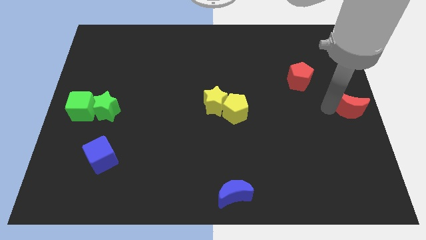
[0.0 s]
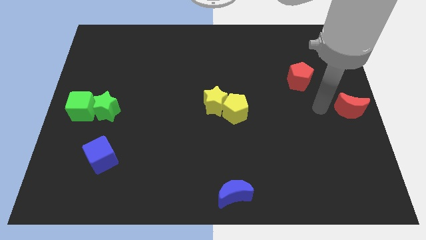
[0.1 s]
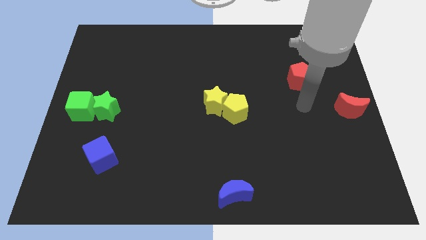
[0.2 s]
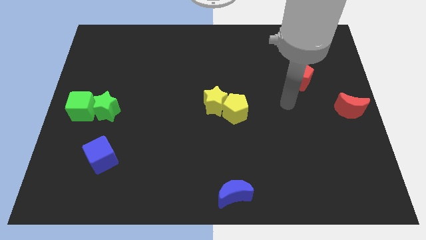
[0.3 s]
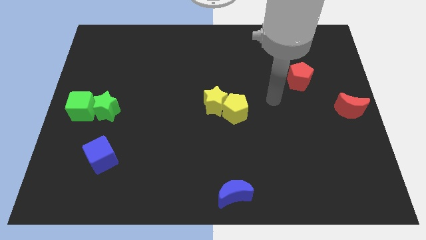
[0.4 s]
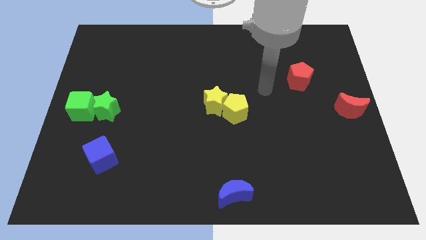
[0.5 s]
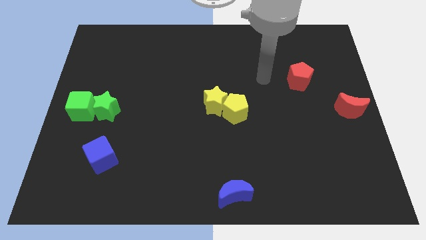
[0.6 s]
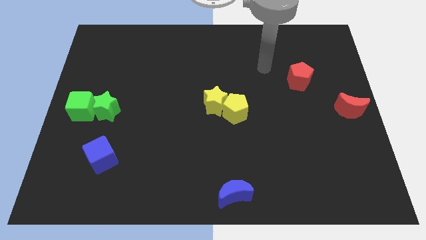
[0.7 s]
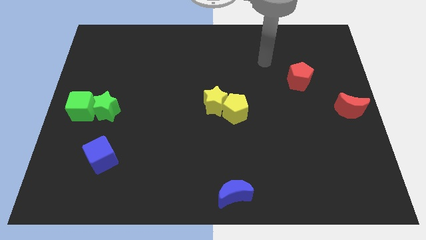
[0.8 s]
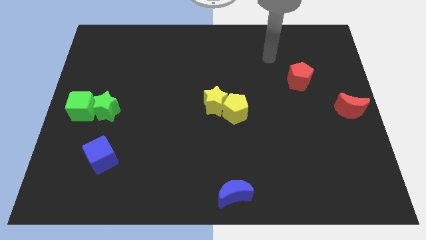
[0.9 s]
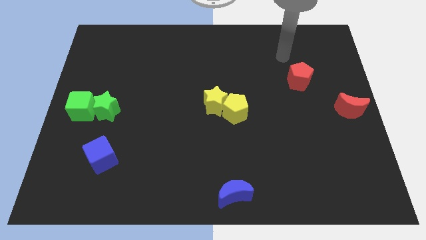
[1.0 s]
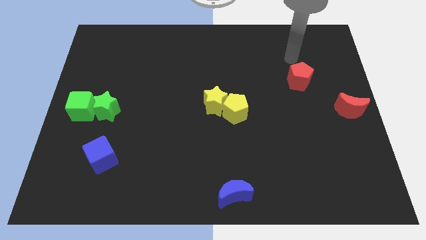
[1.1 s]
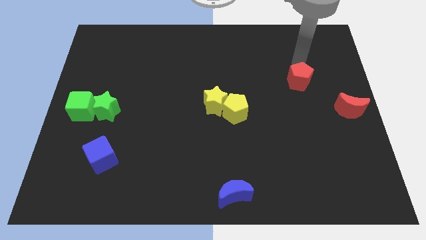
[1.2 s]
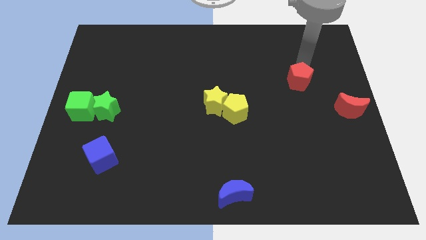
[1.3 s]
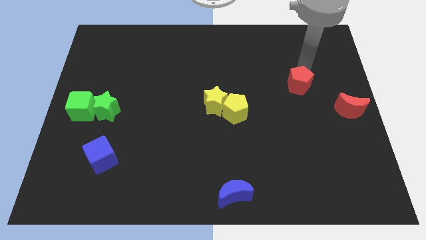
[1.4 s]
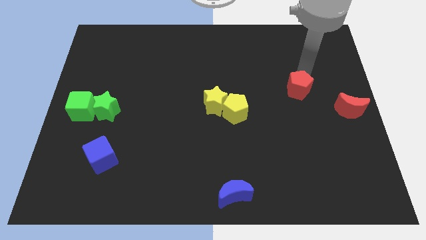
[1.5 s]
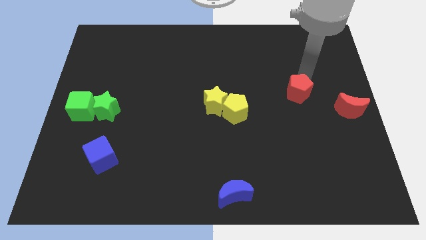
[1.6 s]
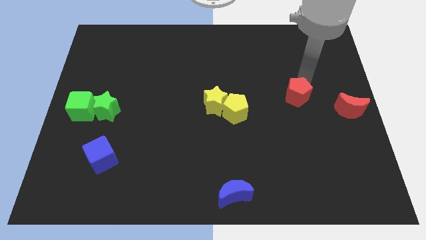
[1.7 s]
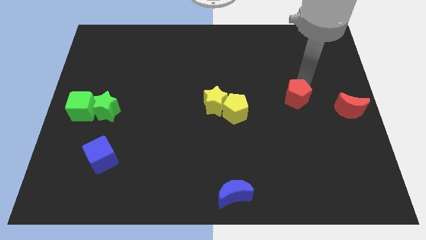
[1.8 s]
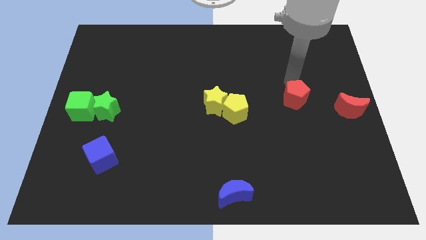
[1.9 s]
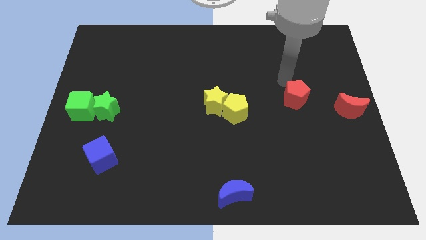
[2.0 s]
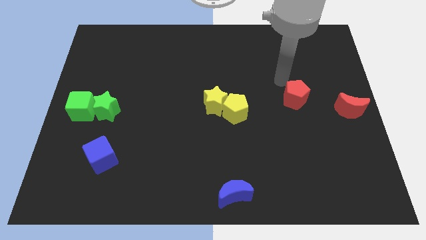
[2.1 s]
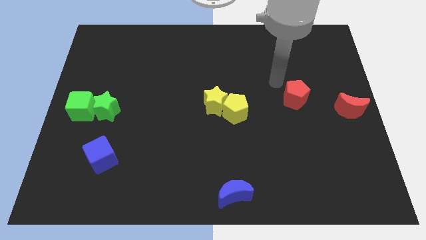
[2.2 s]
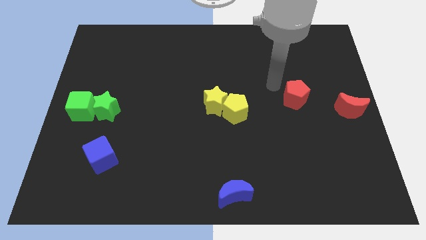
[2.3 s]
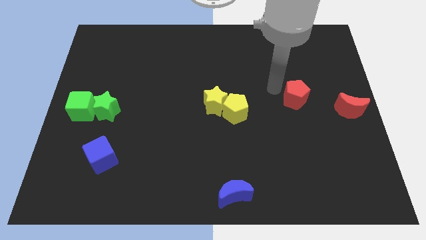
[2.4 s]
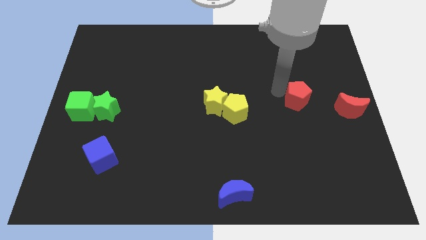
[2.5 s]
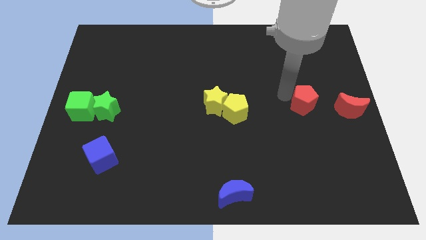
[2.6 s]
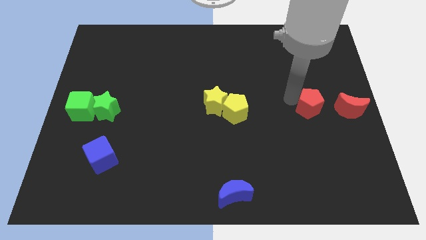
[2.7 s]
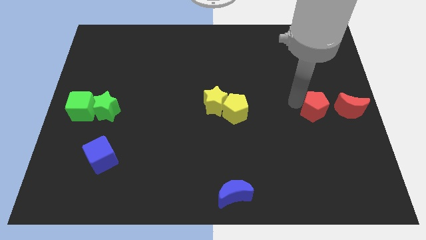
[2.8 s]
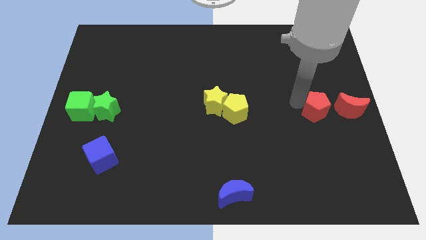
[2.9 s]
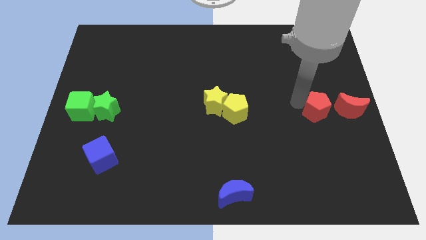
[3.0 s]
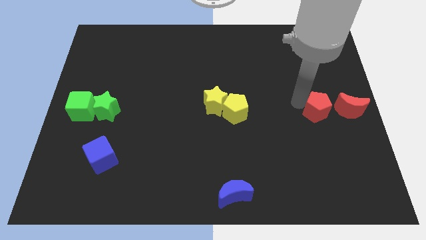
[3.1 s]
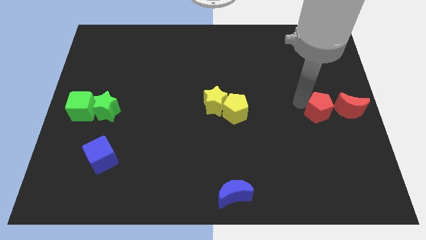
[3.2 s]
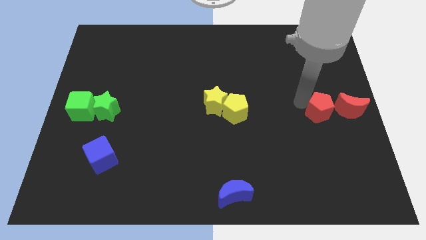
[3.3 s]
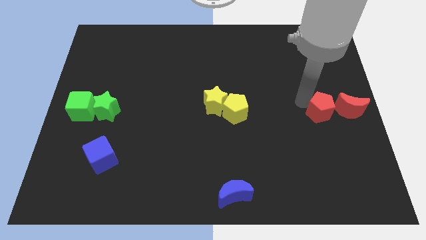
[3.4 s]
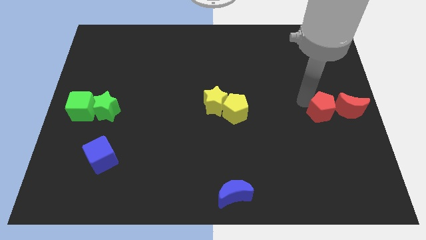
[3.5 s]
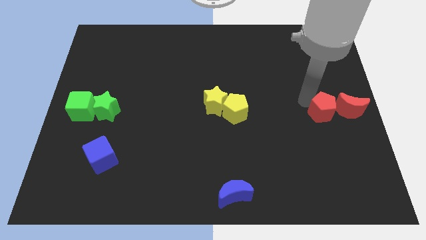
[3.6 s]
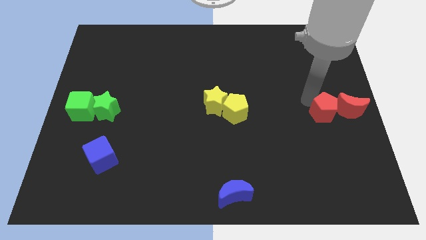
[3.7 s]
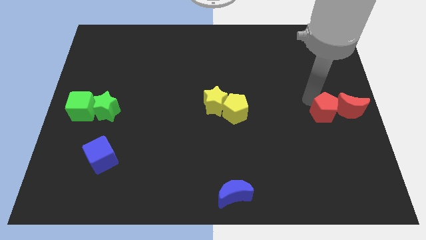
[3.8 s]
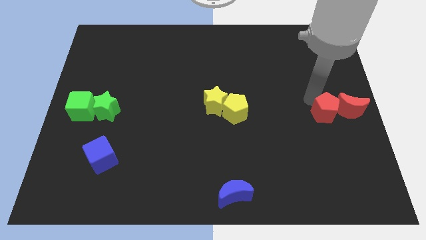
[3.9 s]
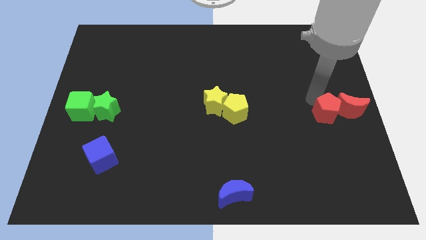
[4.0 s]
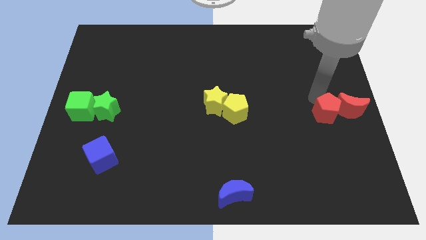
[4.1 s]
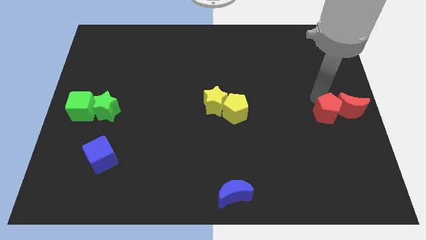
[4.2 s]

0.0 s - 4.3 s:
move the red pentagon into the left side of the red crescent

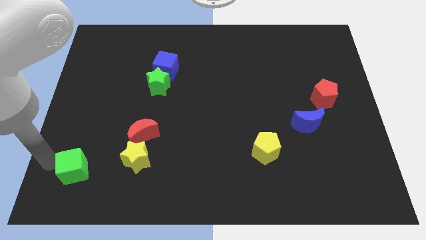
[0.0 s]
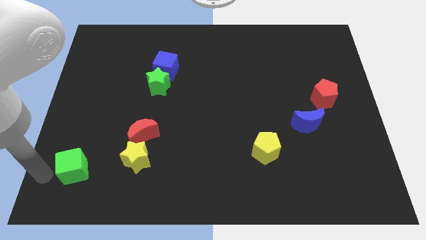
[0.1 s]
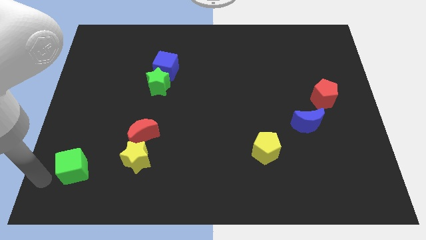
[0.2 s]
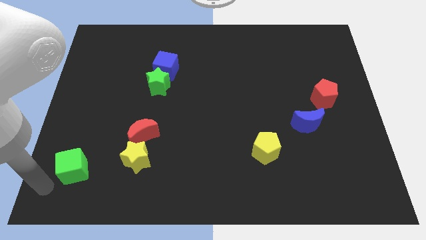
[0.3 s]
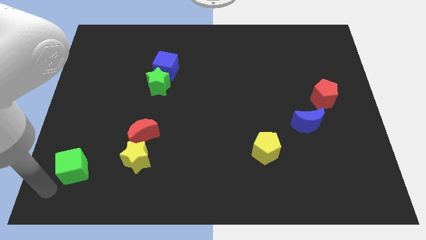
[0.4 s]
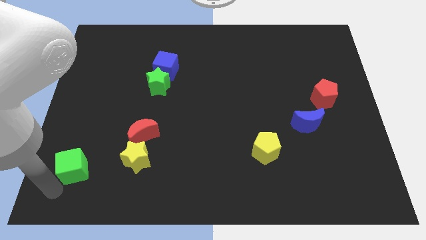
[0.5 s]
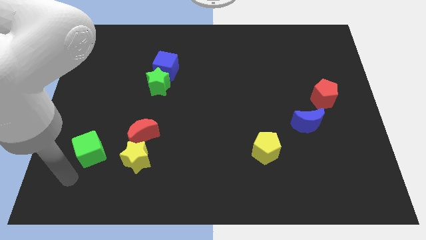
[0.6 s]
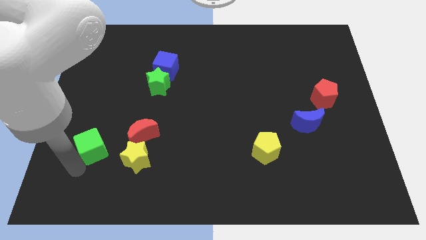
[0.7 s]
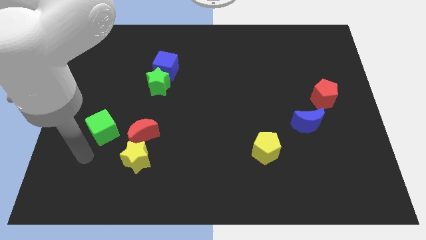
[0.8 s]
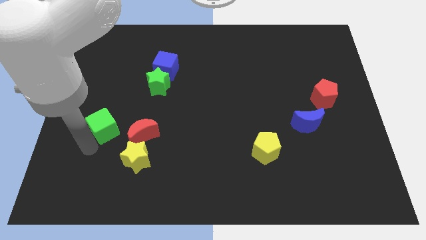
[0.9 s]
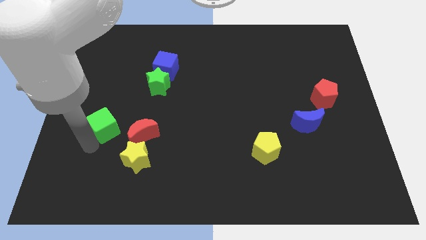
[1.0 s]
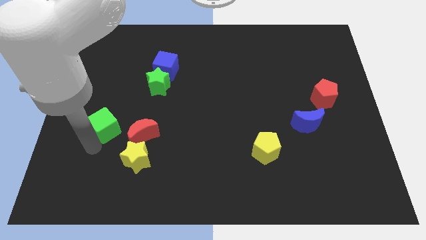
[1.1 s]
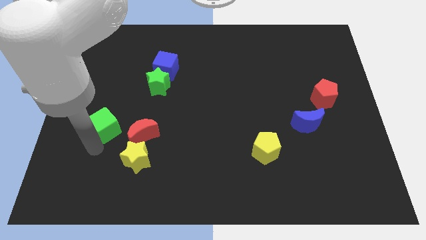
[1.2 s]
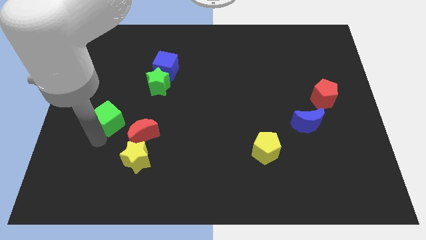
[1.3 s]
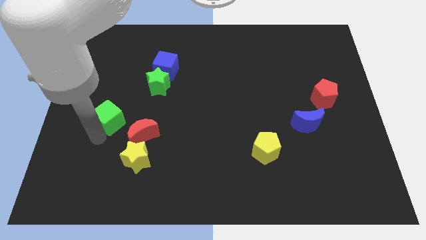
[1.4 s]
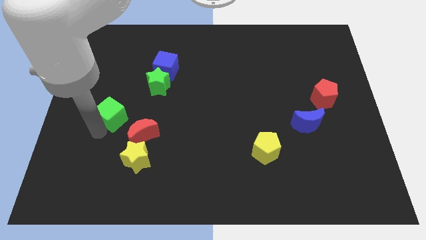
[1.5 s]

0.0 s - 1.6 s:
push the green cube diagonal to the yellow star

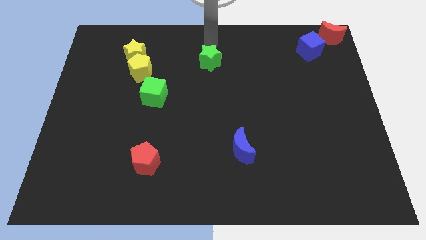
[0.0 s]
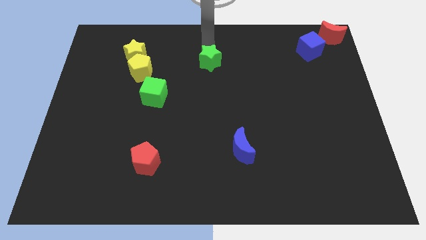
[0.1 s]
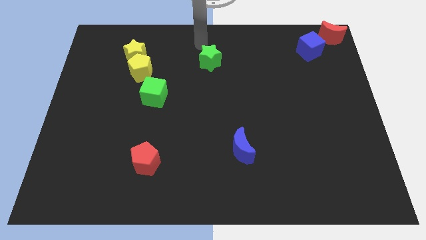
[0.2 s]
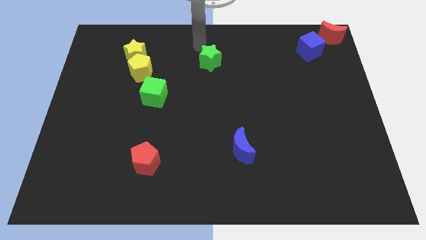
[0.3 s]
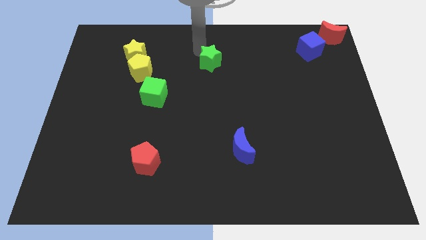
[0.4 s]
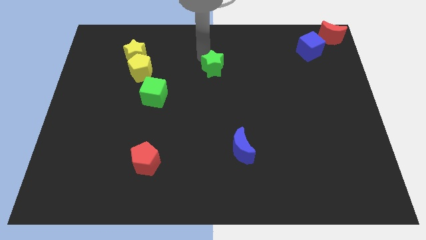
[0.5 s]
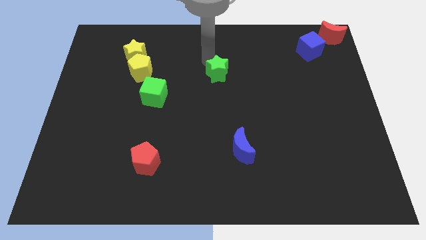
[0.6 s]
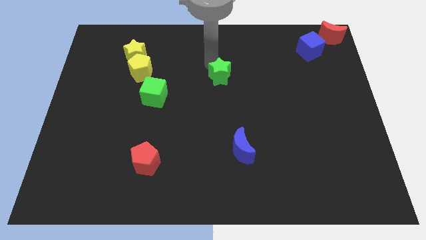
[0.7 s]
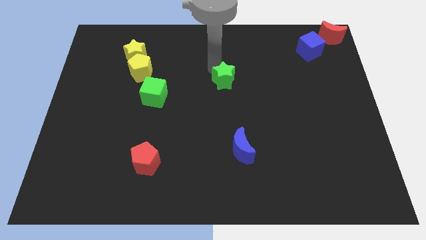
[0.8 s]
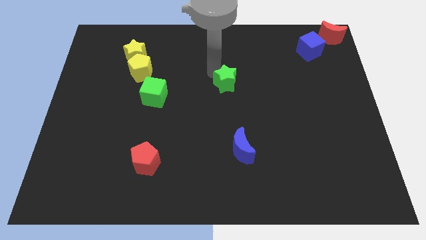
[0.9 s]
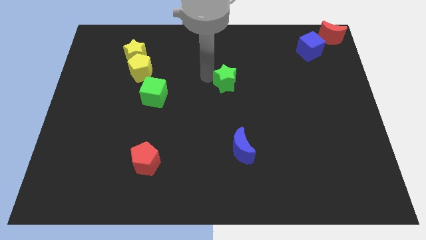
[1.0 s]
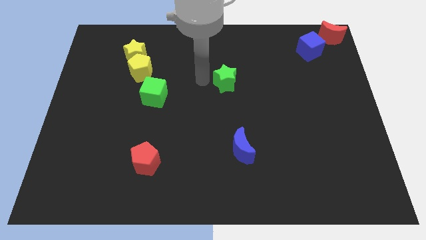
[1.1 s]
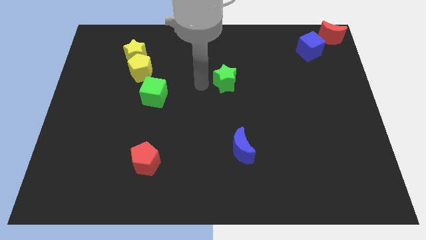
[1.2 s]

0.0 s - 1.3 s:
push the green star towards the center of the board

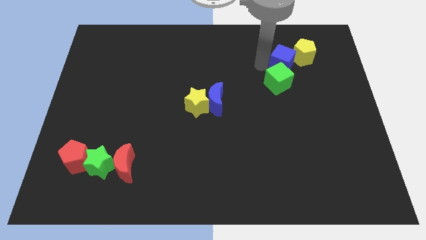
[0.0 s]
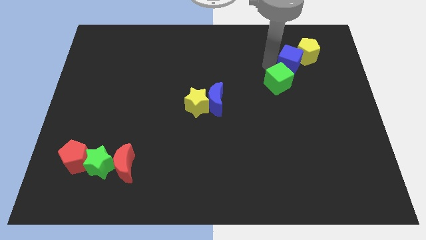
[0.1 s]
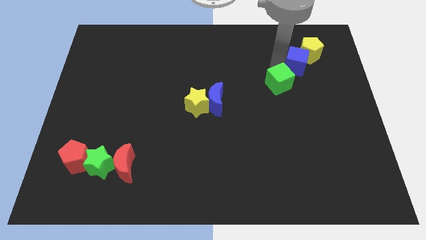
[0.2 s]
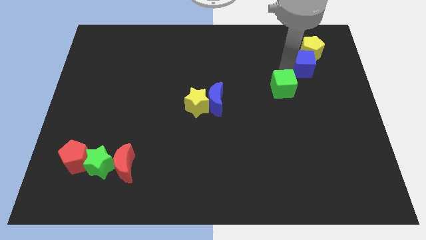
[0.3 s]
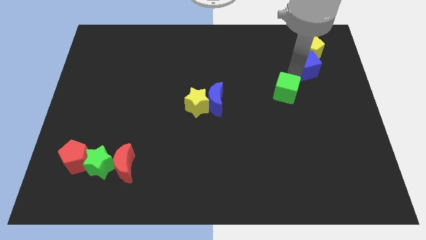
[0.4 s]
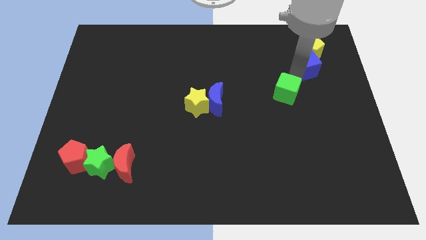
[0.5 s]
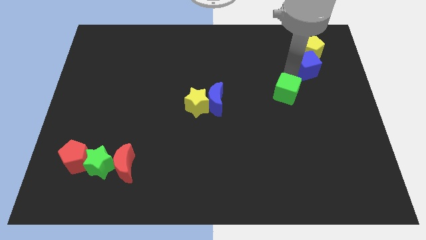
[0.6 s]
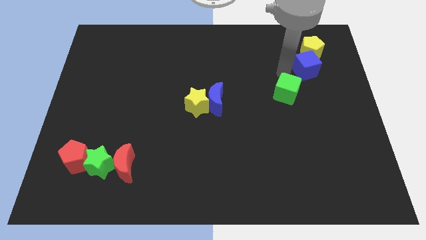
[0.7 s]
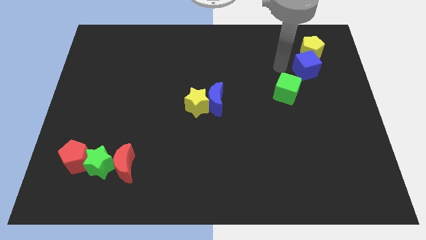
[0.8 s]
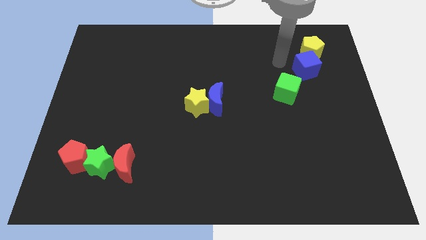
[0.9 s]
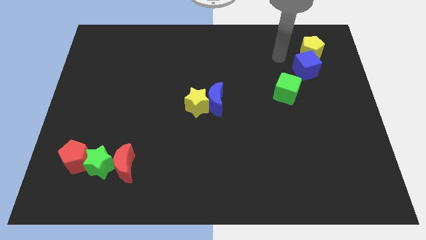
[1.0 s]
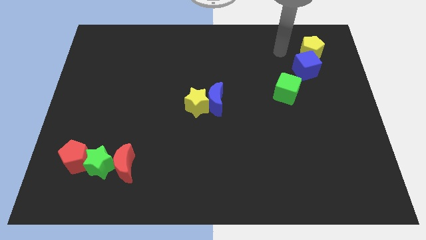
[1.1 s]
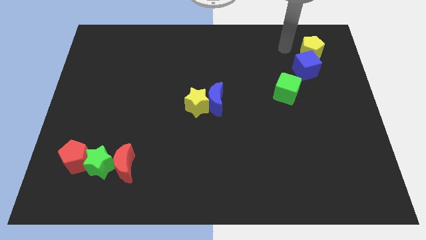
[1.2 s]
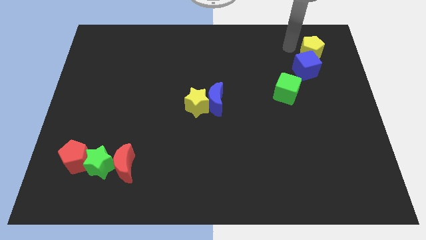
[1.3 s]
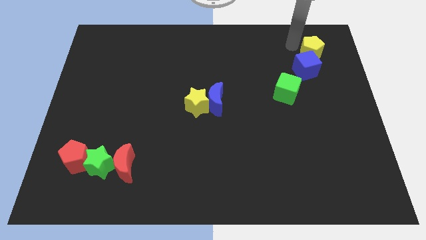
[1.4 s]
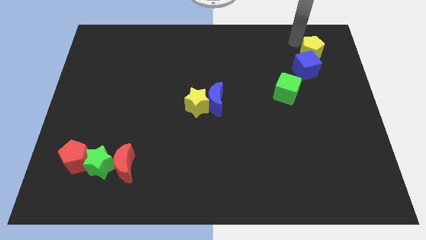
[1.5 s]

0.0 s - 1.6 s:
separate the green cube and blue cube

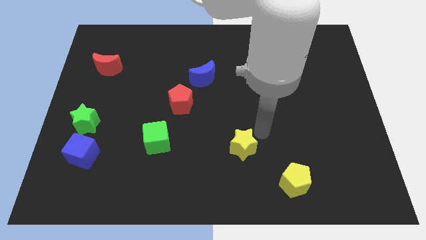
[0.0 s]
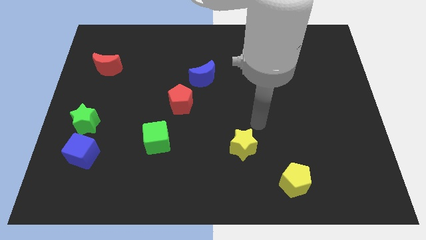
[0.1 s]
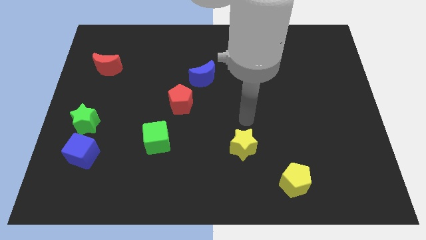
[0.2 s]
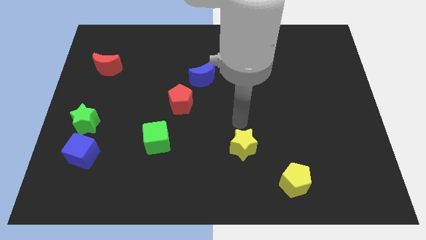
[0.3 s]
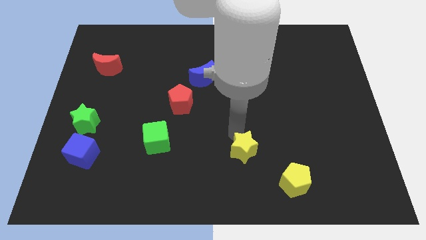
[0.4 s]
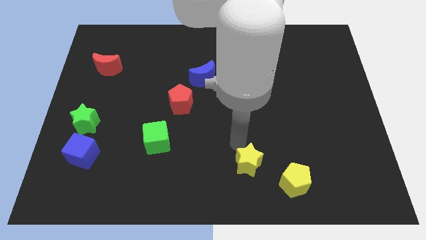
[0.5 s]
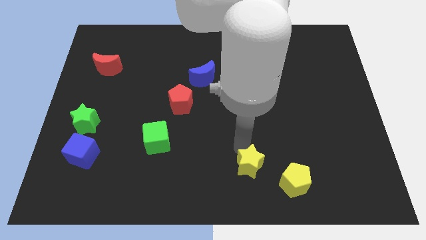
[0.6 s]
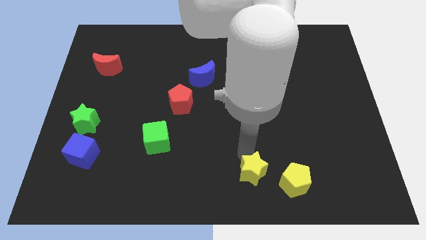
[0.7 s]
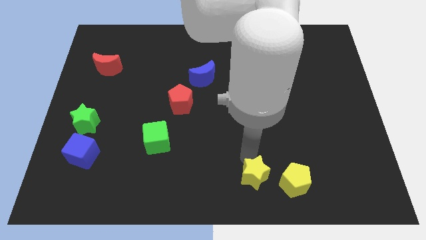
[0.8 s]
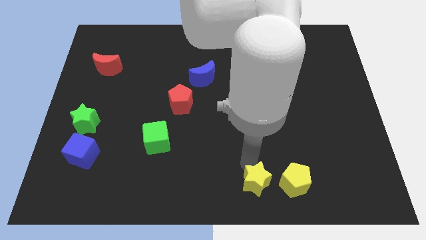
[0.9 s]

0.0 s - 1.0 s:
place yellow star to the left of the yellow pentagon
